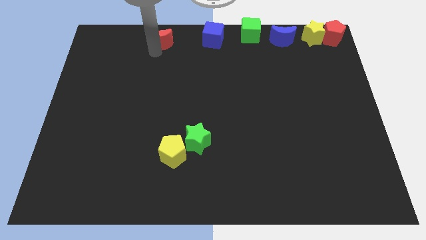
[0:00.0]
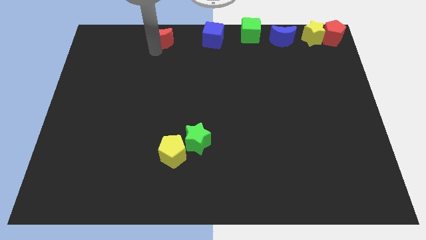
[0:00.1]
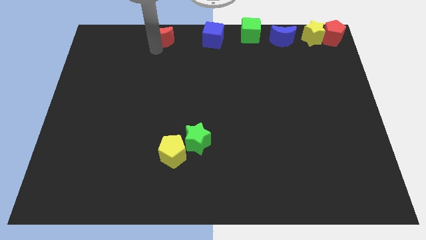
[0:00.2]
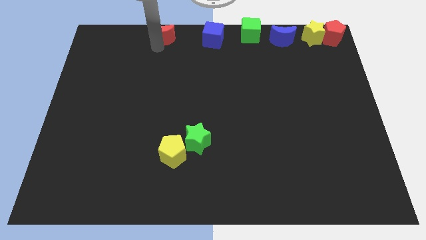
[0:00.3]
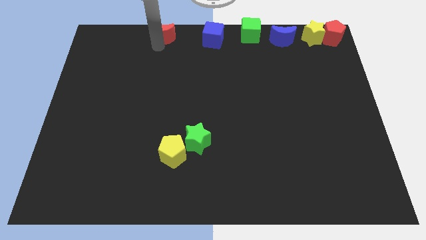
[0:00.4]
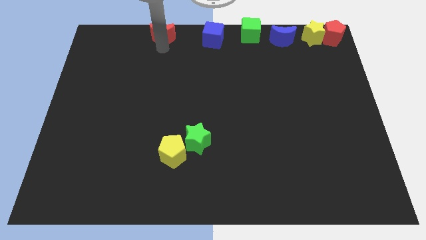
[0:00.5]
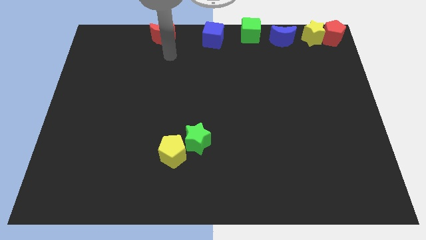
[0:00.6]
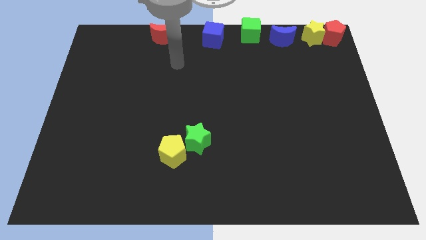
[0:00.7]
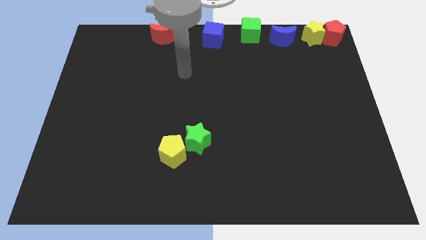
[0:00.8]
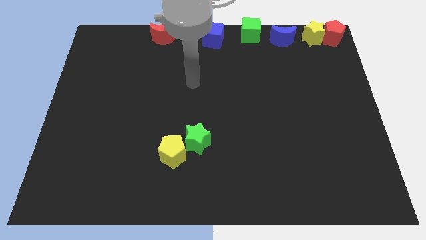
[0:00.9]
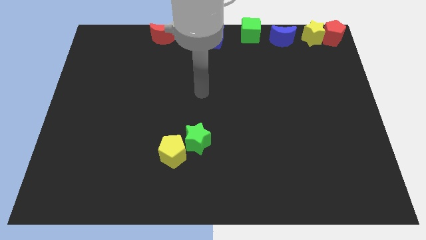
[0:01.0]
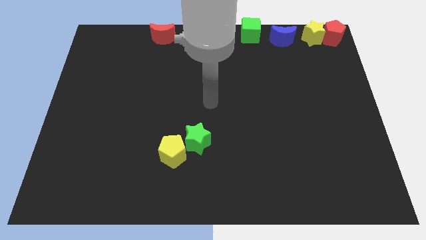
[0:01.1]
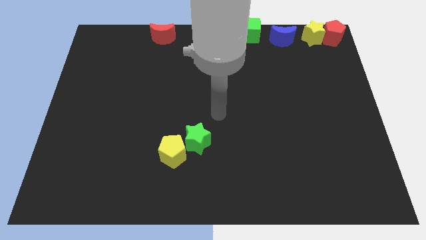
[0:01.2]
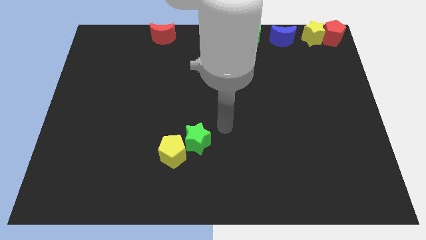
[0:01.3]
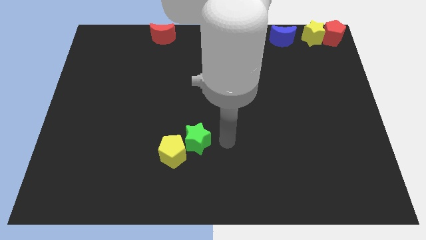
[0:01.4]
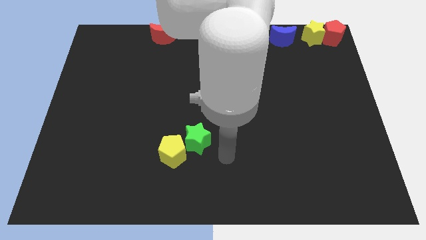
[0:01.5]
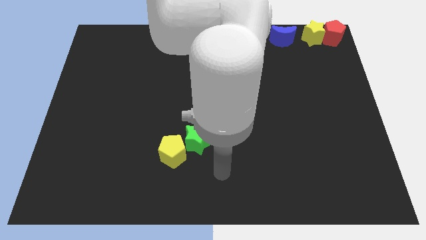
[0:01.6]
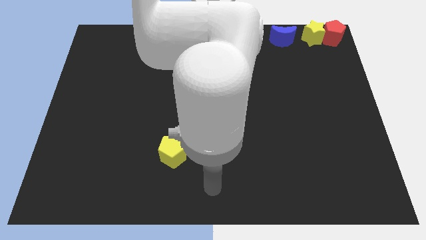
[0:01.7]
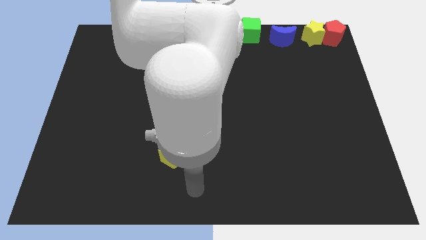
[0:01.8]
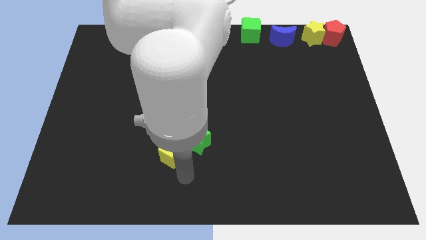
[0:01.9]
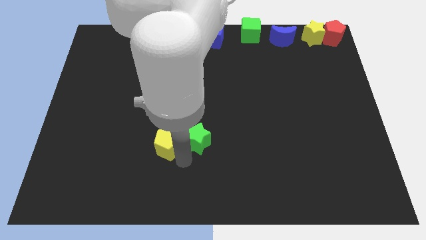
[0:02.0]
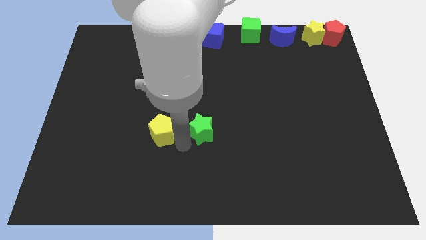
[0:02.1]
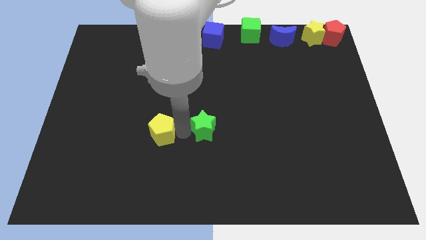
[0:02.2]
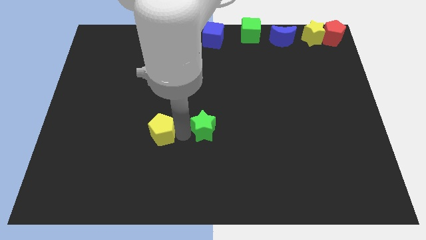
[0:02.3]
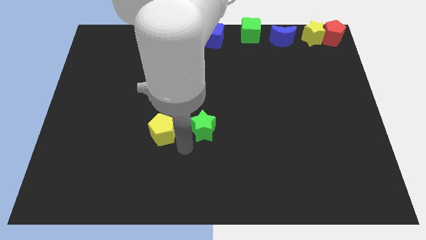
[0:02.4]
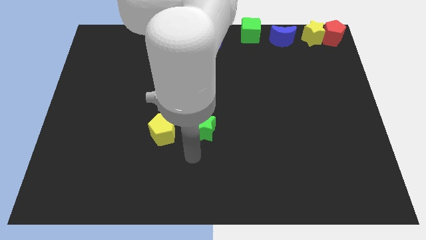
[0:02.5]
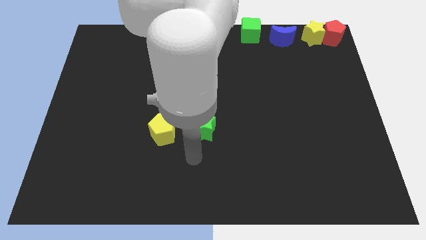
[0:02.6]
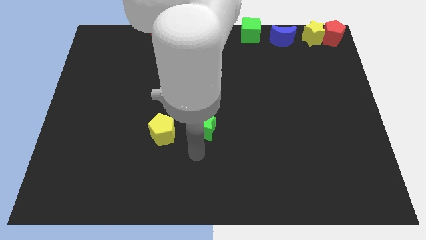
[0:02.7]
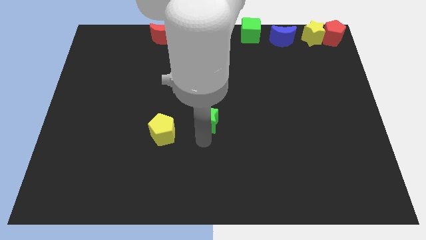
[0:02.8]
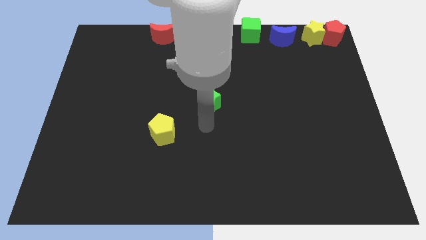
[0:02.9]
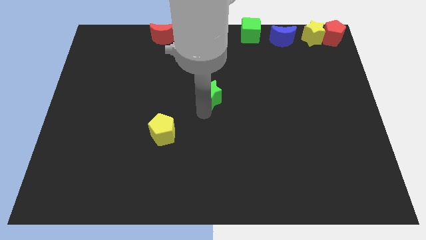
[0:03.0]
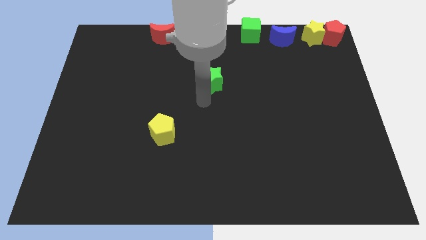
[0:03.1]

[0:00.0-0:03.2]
separate yellow pentagon and green star

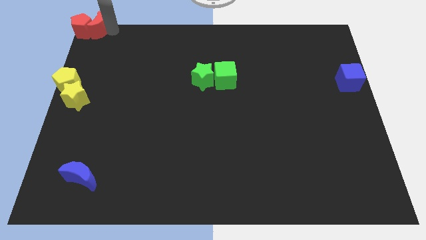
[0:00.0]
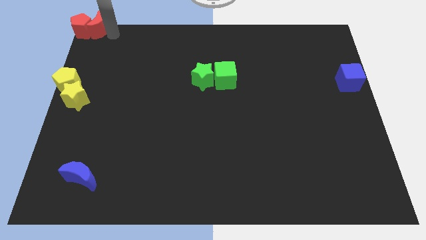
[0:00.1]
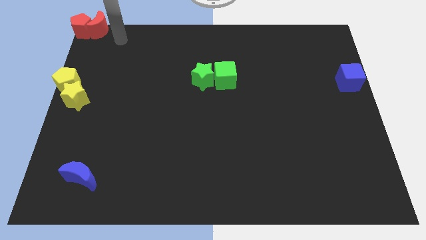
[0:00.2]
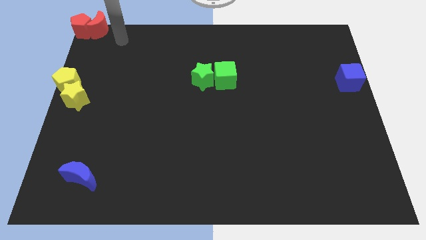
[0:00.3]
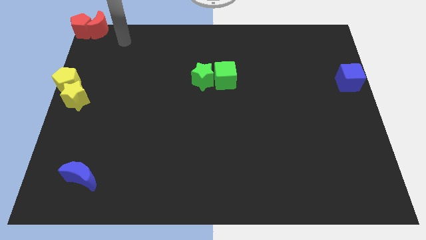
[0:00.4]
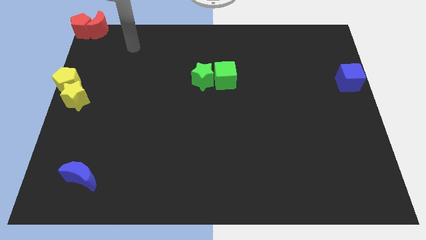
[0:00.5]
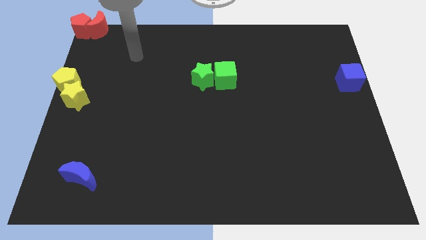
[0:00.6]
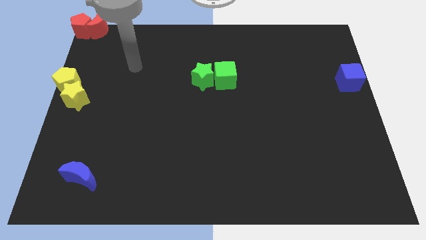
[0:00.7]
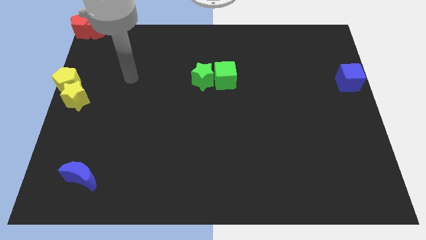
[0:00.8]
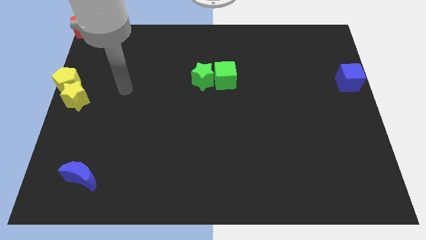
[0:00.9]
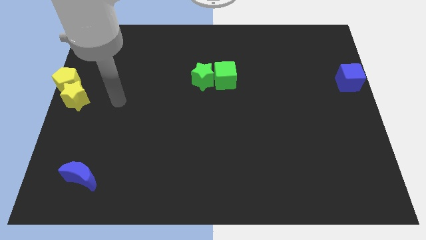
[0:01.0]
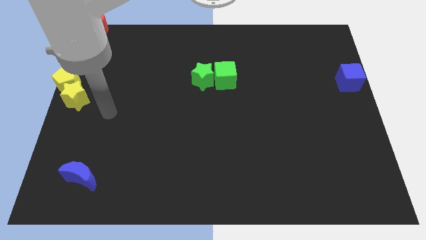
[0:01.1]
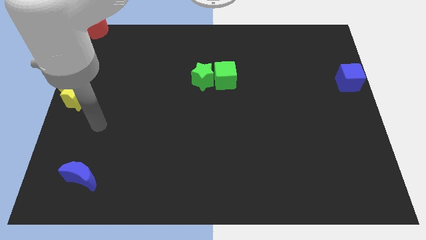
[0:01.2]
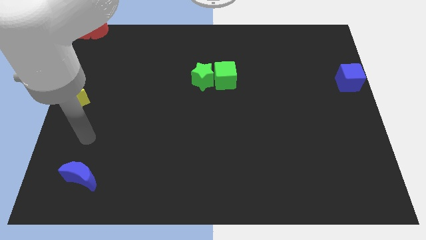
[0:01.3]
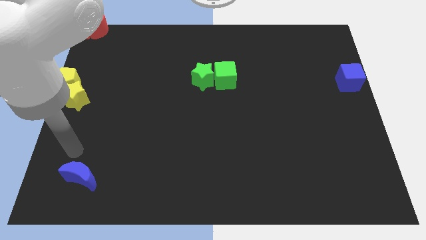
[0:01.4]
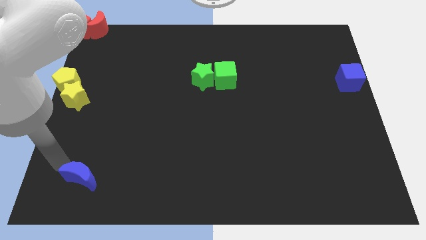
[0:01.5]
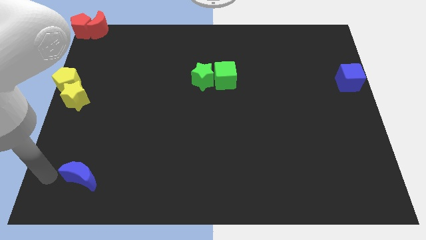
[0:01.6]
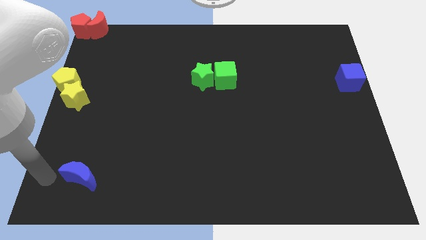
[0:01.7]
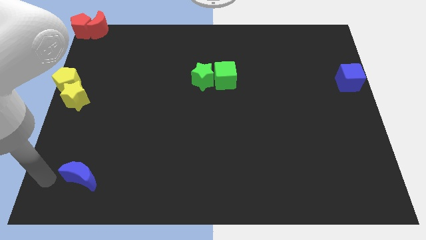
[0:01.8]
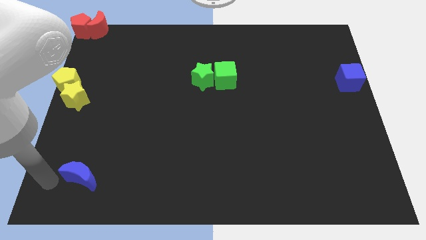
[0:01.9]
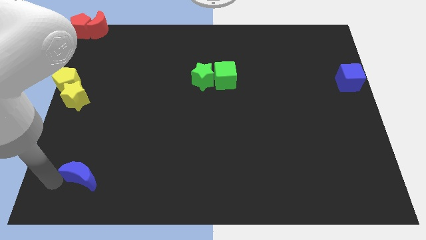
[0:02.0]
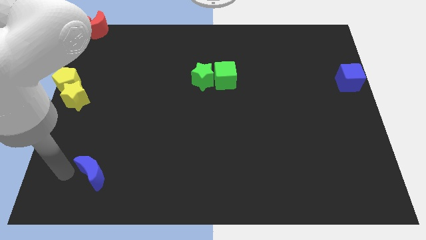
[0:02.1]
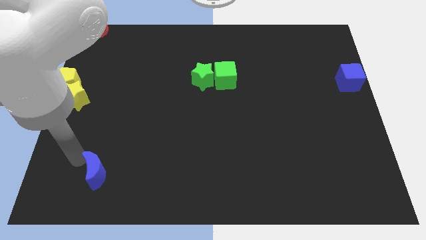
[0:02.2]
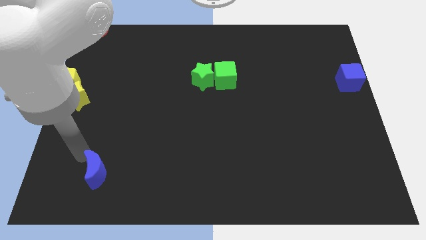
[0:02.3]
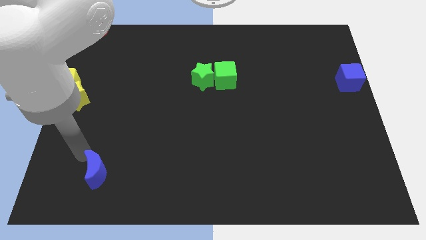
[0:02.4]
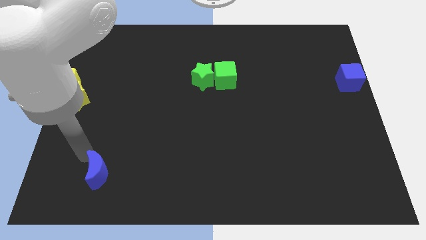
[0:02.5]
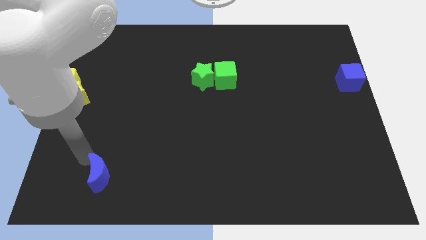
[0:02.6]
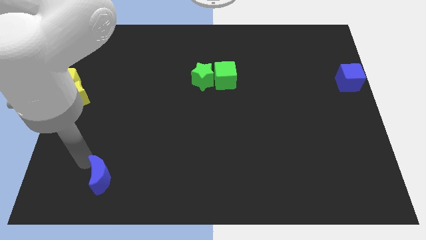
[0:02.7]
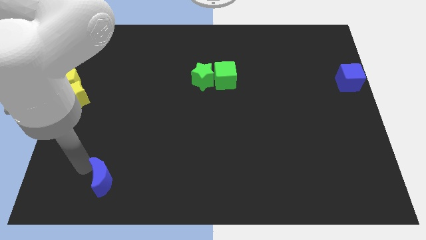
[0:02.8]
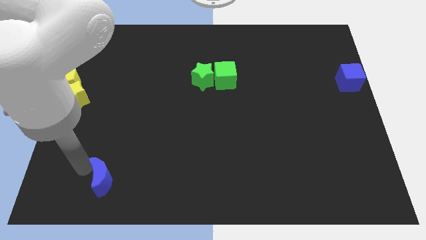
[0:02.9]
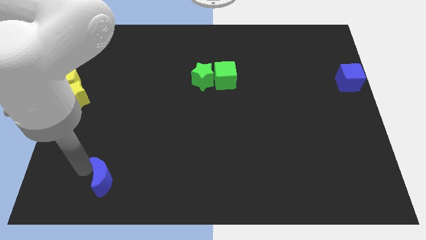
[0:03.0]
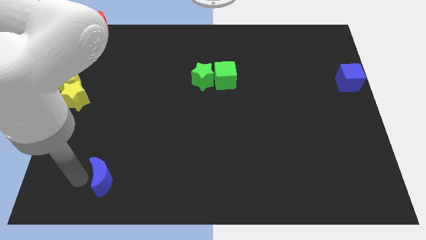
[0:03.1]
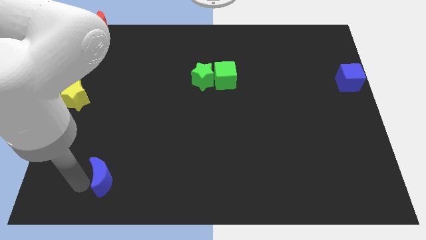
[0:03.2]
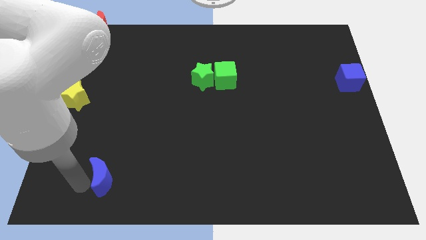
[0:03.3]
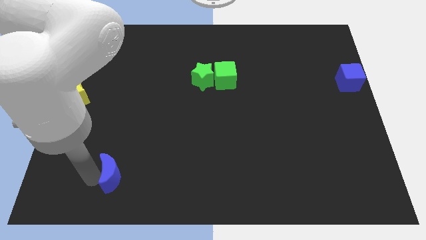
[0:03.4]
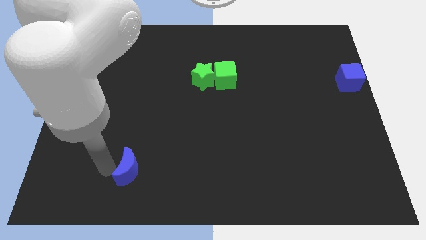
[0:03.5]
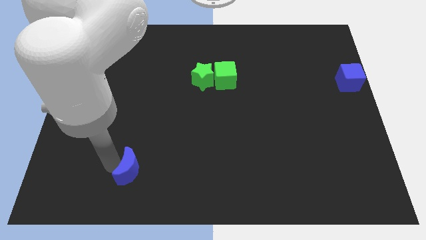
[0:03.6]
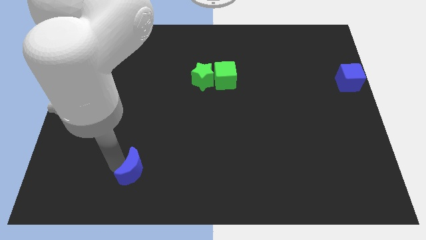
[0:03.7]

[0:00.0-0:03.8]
push the blue crescent towards the bottom center of the board

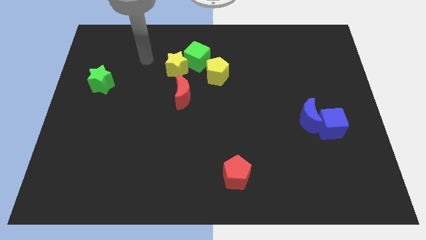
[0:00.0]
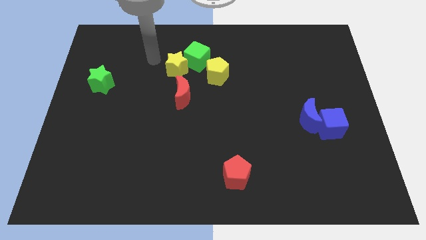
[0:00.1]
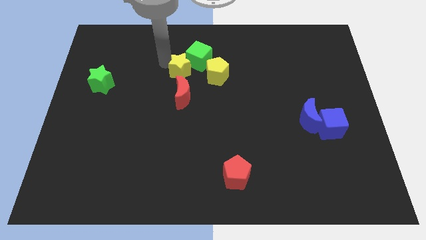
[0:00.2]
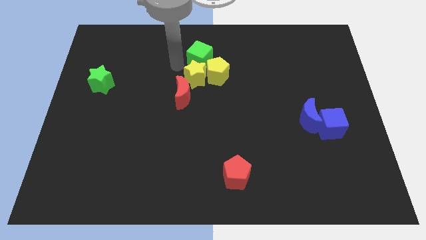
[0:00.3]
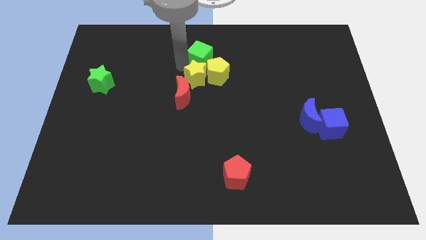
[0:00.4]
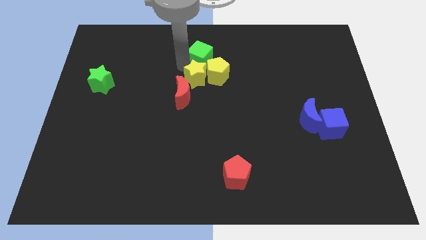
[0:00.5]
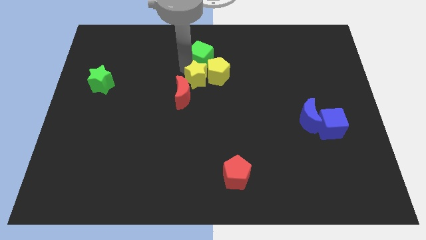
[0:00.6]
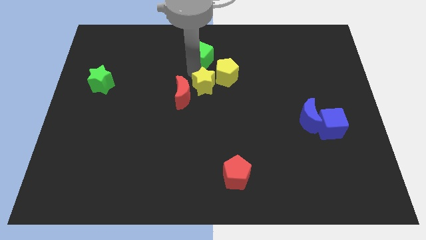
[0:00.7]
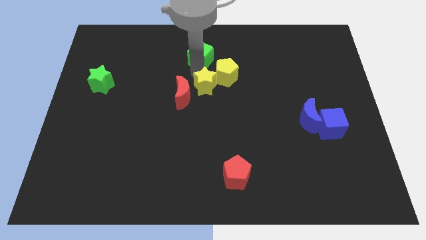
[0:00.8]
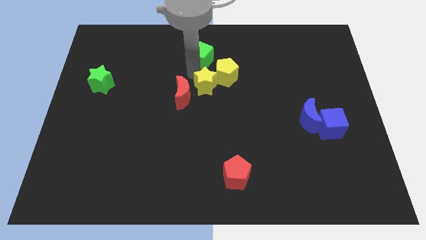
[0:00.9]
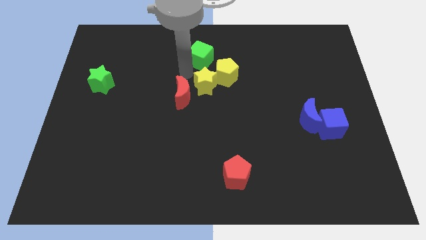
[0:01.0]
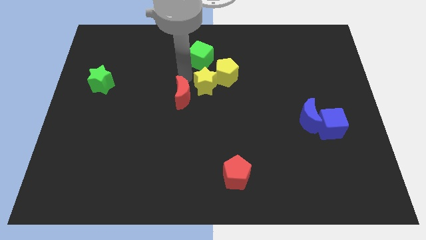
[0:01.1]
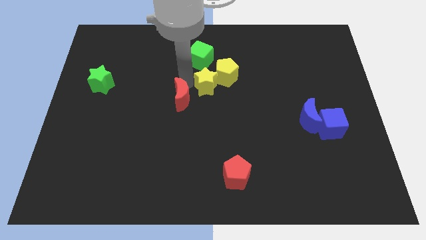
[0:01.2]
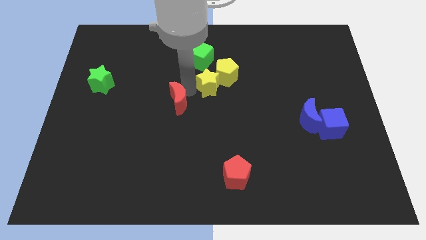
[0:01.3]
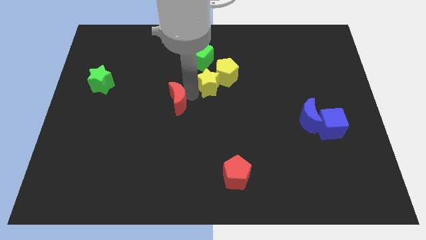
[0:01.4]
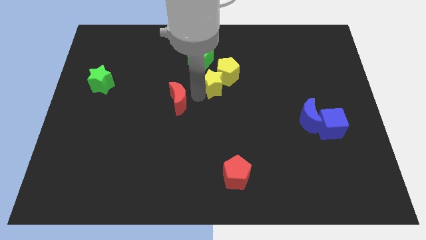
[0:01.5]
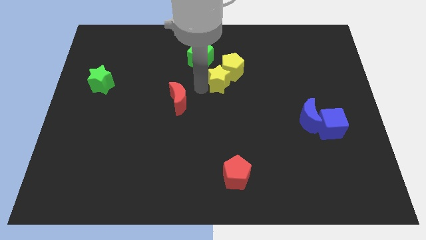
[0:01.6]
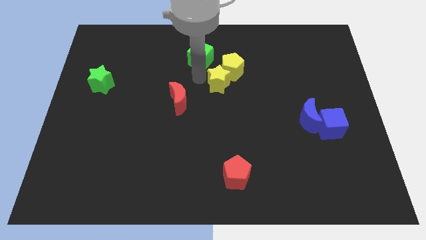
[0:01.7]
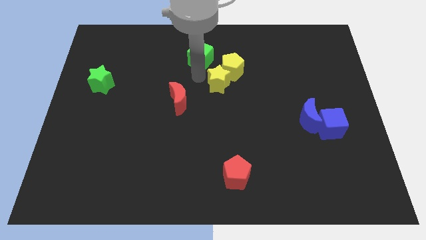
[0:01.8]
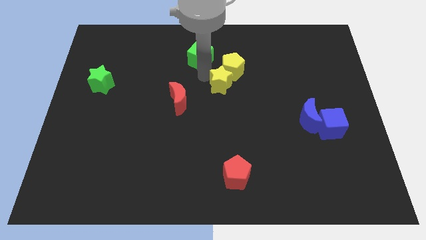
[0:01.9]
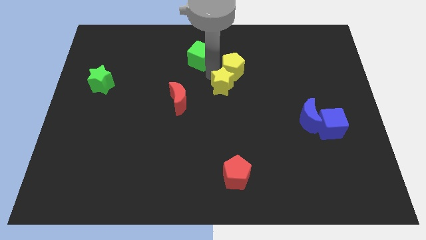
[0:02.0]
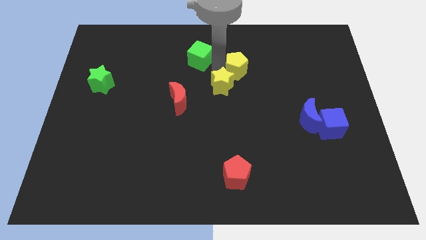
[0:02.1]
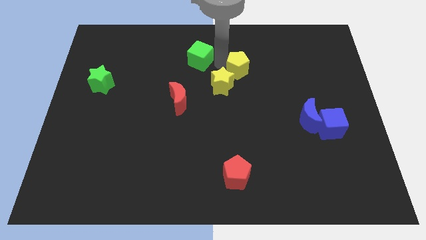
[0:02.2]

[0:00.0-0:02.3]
move the yellow star left below the yellow pentagon
